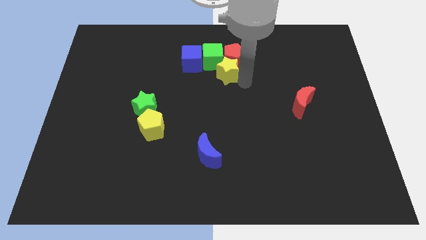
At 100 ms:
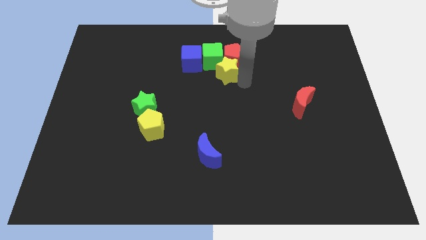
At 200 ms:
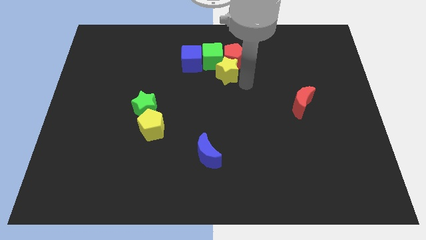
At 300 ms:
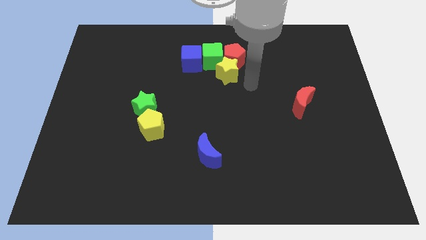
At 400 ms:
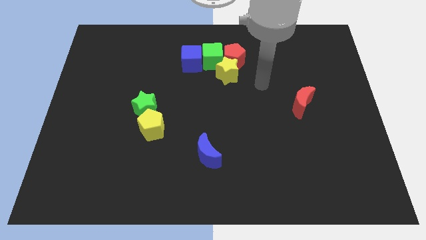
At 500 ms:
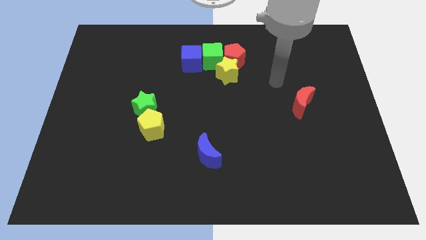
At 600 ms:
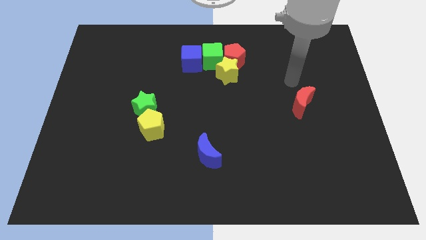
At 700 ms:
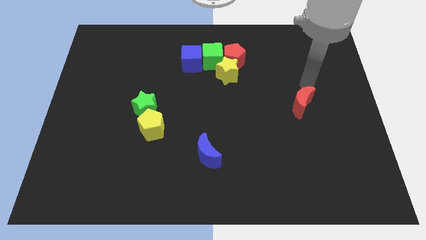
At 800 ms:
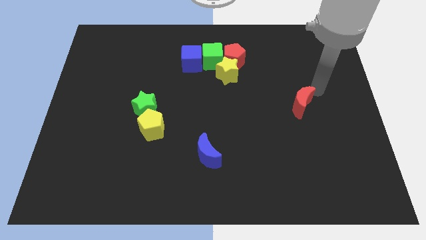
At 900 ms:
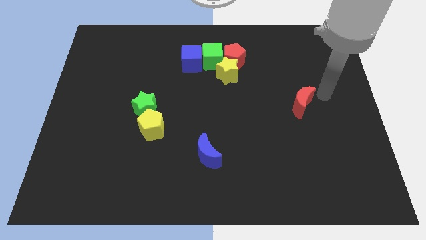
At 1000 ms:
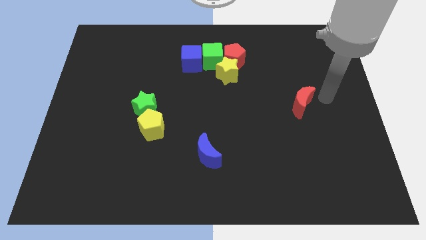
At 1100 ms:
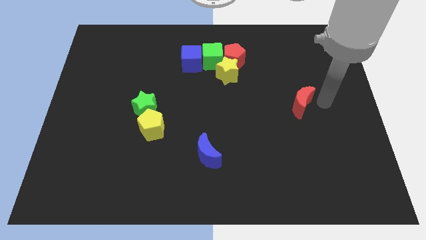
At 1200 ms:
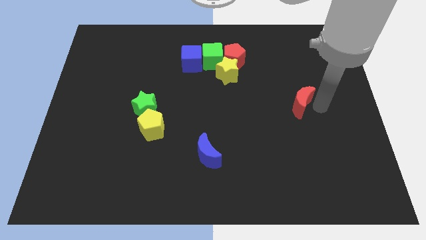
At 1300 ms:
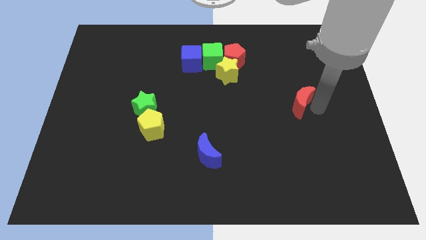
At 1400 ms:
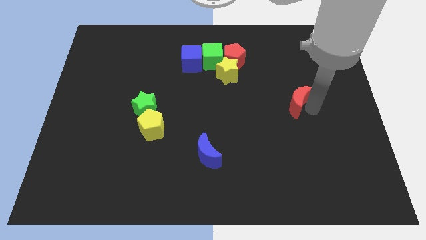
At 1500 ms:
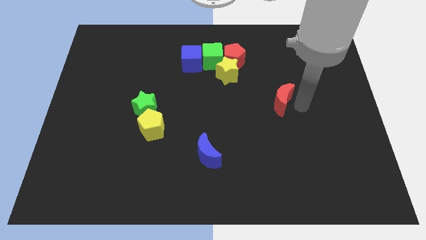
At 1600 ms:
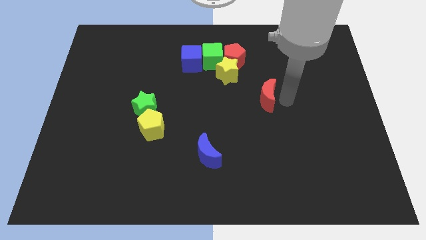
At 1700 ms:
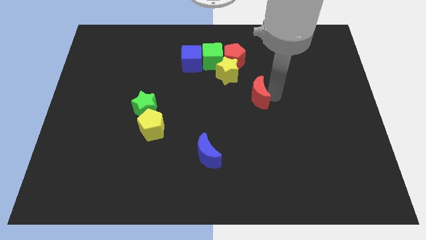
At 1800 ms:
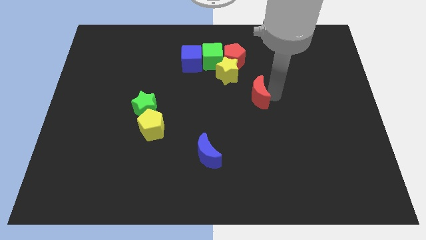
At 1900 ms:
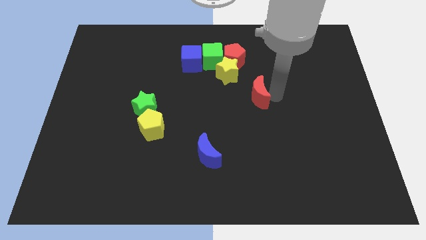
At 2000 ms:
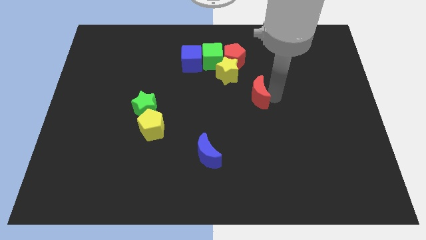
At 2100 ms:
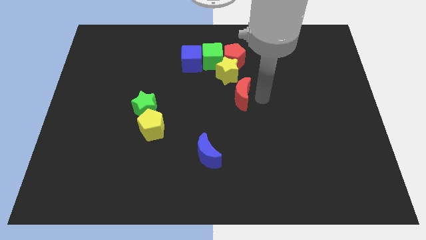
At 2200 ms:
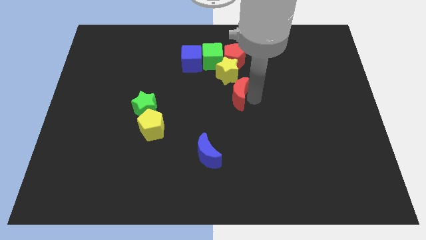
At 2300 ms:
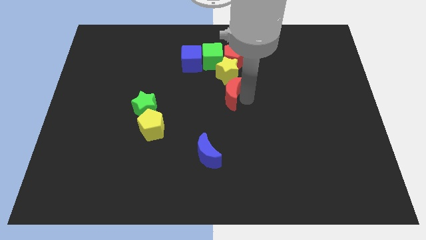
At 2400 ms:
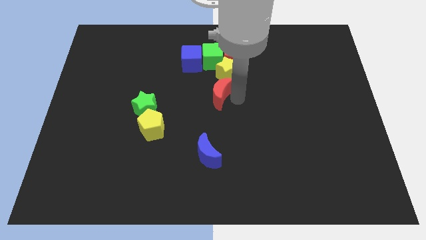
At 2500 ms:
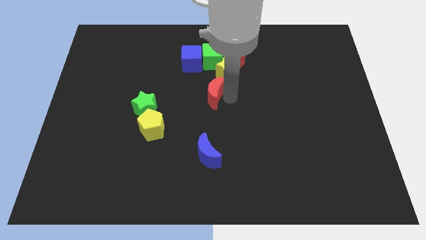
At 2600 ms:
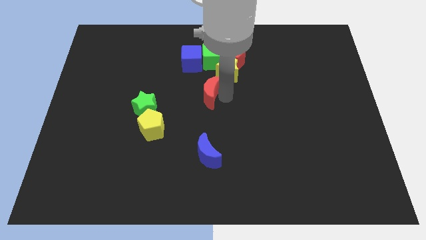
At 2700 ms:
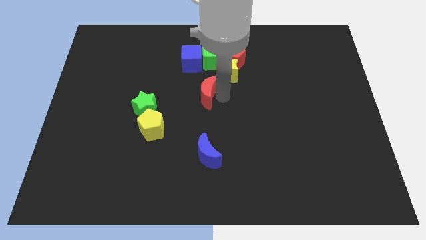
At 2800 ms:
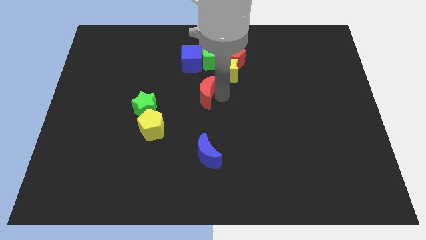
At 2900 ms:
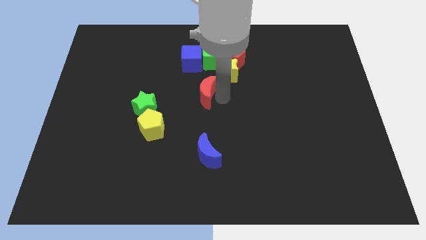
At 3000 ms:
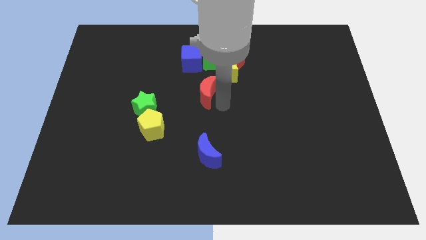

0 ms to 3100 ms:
place the red crescent vertically above the blue crescent

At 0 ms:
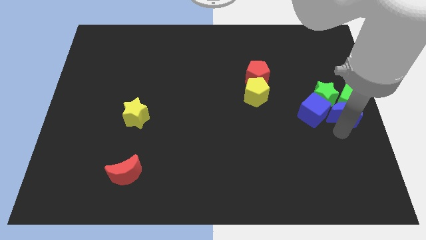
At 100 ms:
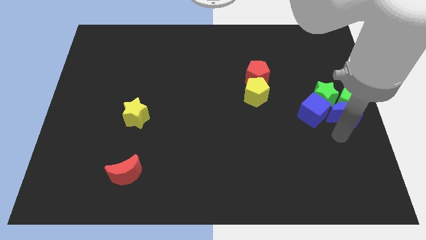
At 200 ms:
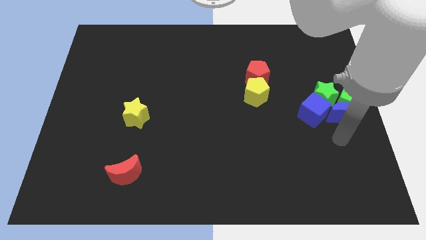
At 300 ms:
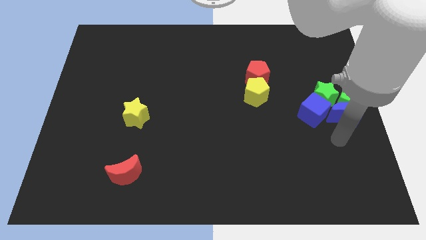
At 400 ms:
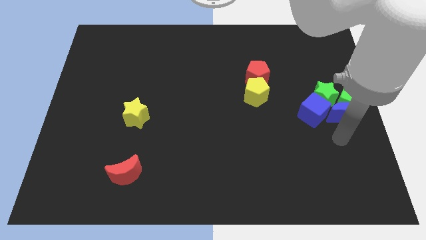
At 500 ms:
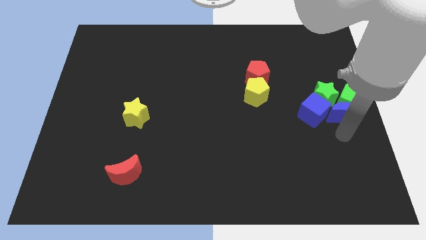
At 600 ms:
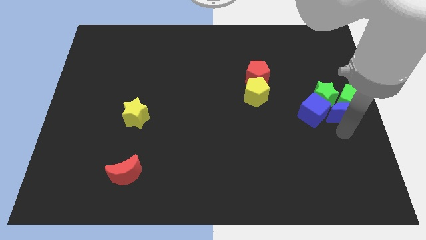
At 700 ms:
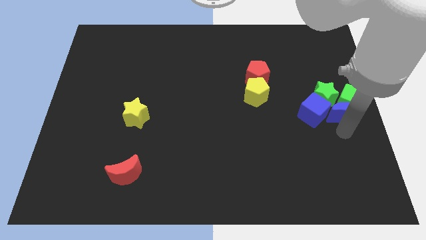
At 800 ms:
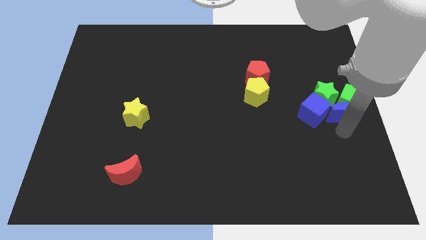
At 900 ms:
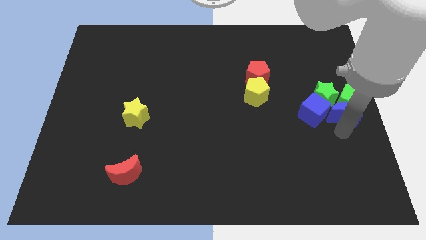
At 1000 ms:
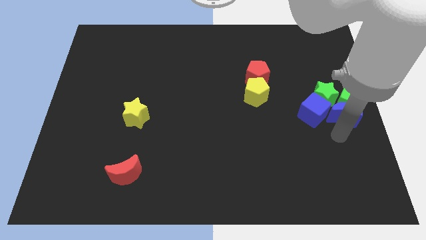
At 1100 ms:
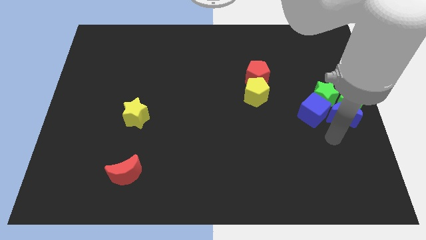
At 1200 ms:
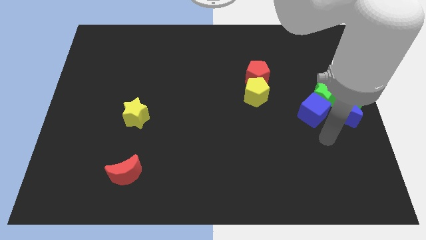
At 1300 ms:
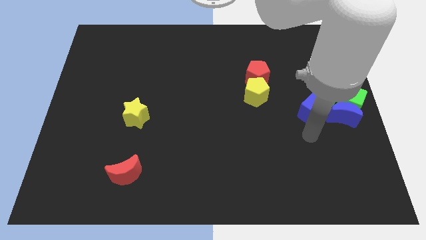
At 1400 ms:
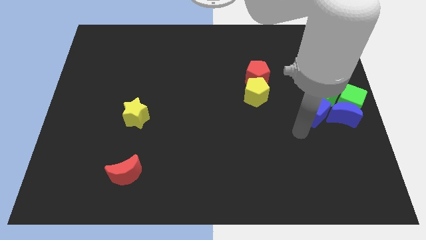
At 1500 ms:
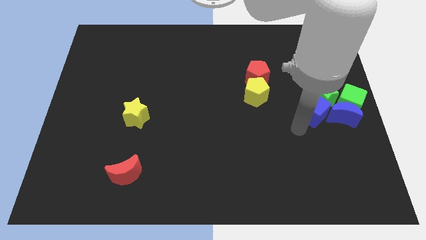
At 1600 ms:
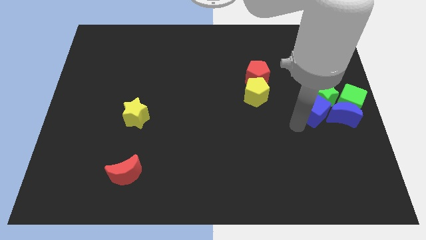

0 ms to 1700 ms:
move your arm towards the blue cube

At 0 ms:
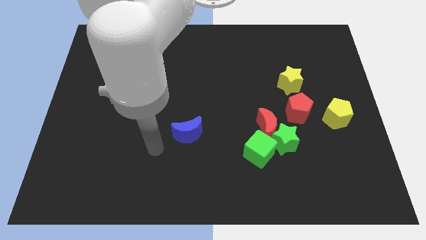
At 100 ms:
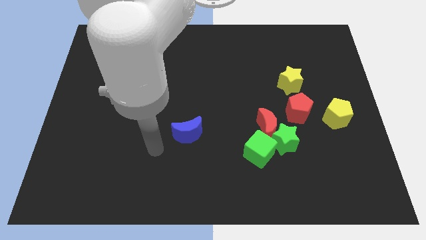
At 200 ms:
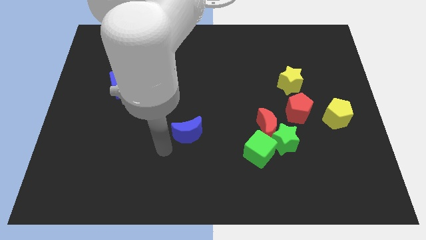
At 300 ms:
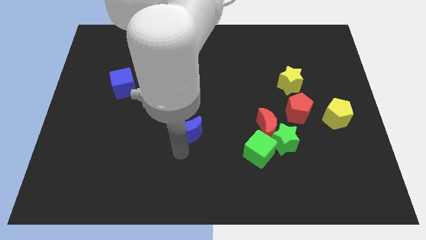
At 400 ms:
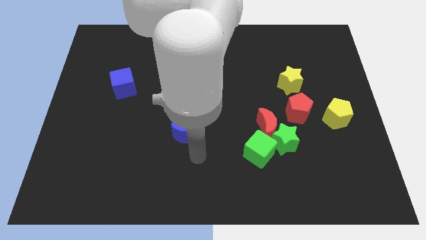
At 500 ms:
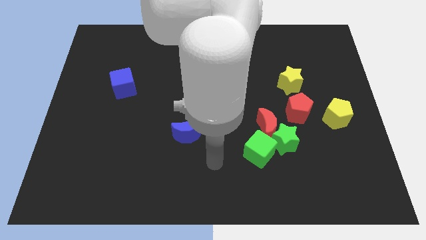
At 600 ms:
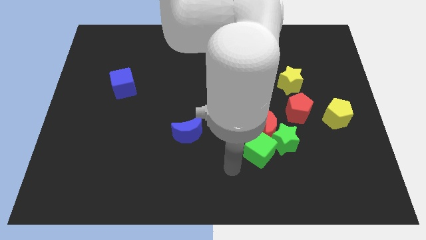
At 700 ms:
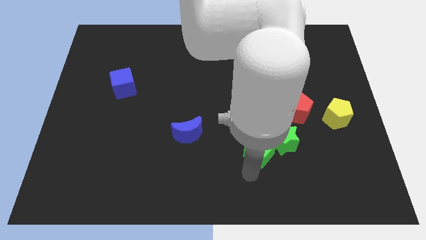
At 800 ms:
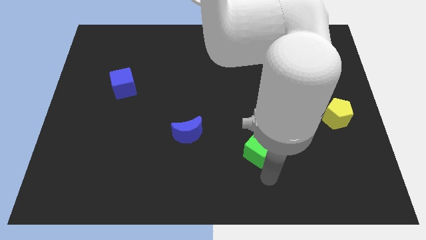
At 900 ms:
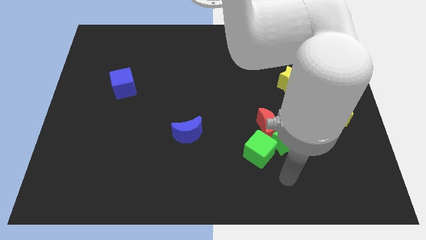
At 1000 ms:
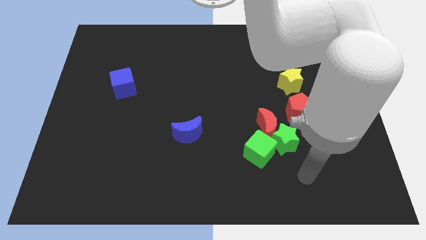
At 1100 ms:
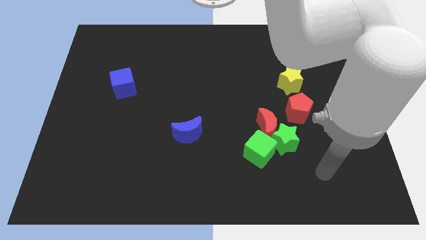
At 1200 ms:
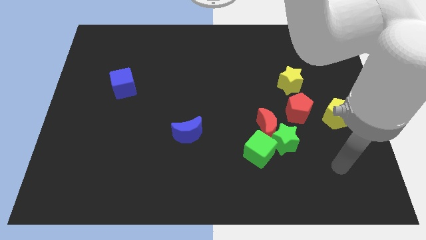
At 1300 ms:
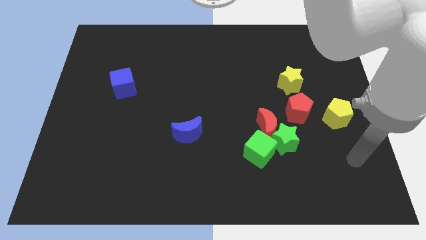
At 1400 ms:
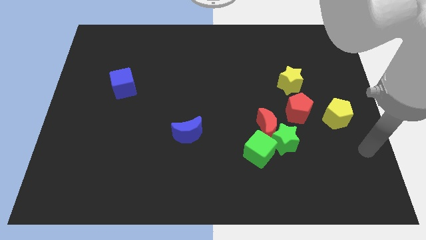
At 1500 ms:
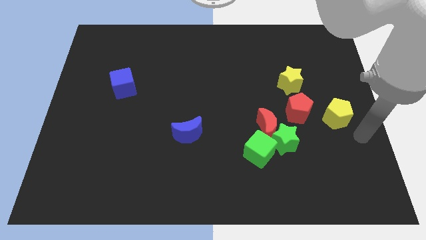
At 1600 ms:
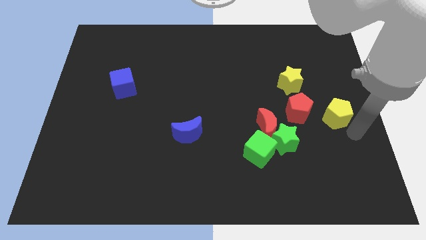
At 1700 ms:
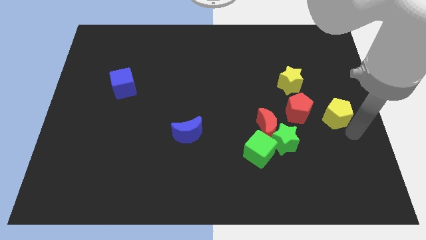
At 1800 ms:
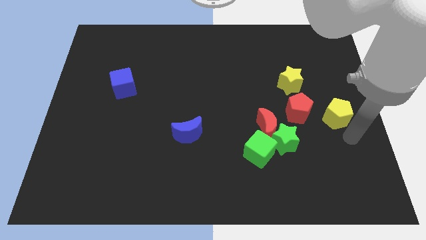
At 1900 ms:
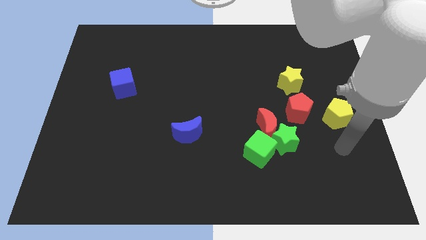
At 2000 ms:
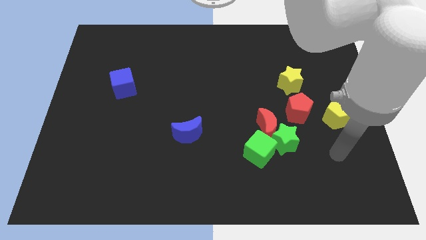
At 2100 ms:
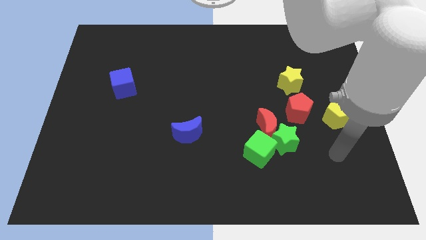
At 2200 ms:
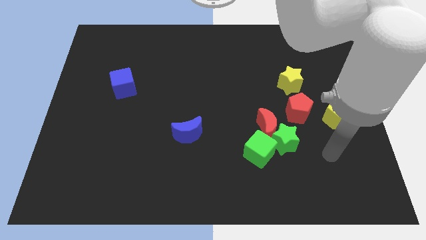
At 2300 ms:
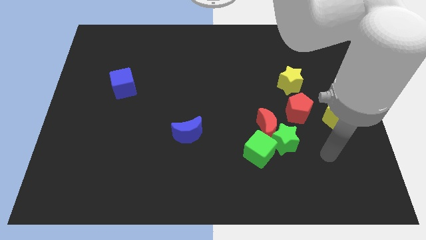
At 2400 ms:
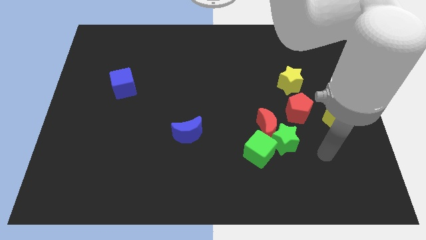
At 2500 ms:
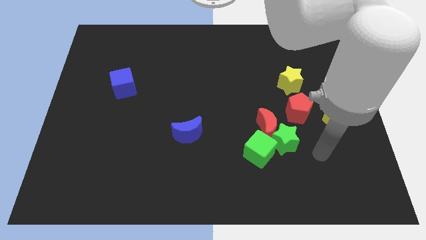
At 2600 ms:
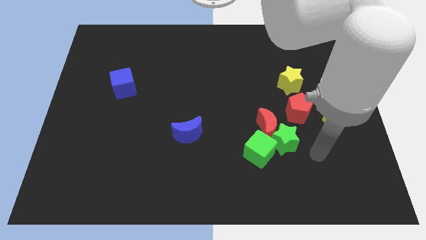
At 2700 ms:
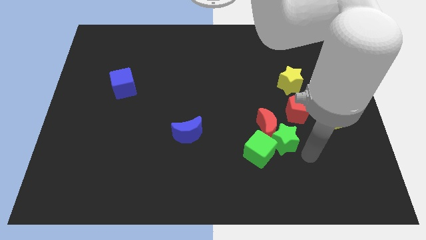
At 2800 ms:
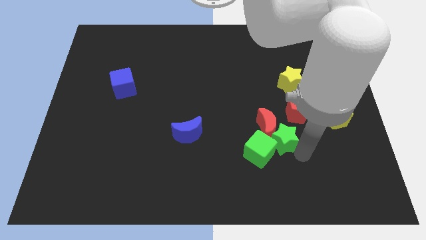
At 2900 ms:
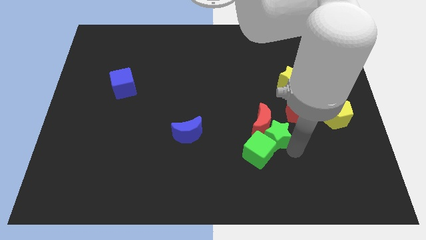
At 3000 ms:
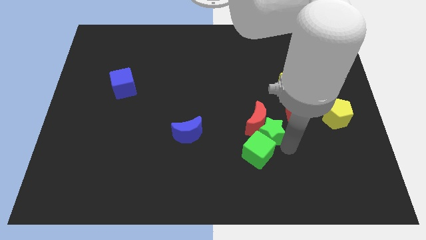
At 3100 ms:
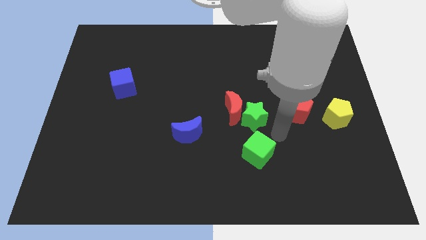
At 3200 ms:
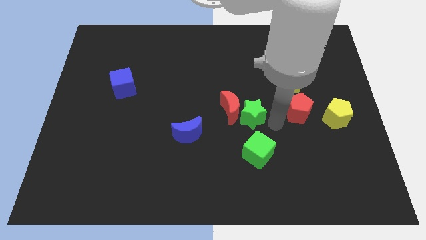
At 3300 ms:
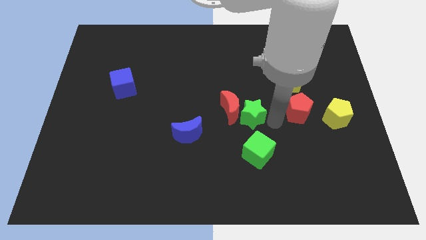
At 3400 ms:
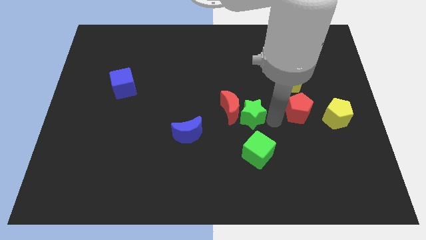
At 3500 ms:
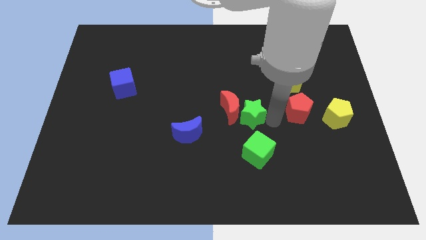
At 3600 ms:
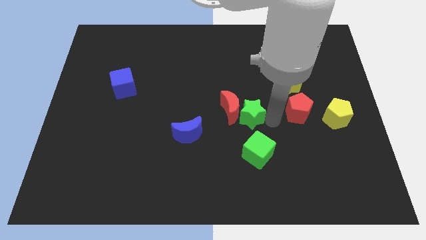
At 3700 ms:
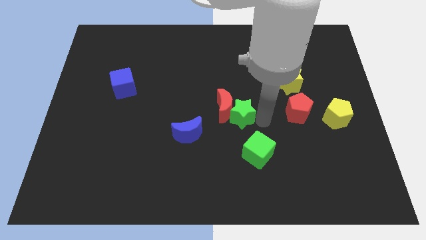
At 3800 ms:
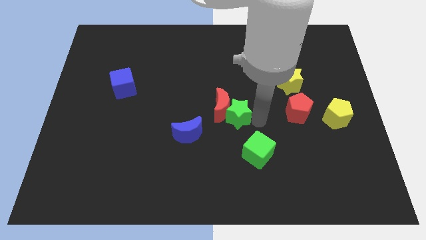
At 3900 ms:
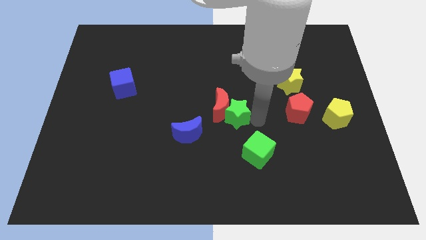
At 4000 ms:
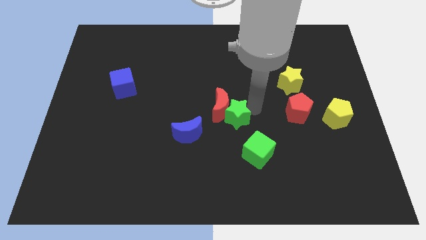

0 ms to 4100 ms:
separate green cube and green star
